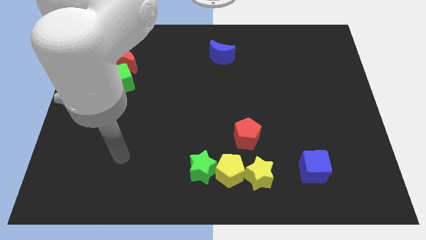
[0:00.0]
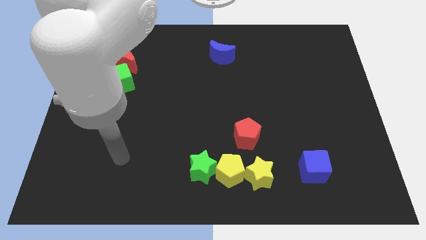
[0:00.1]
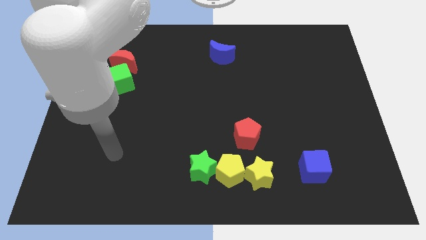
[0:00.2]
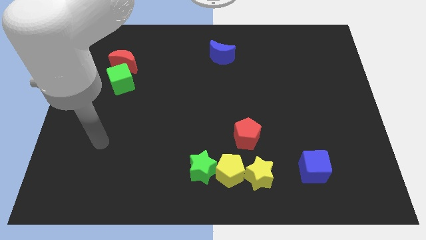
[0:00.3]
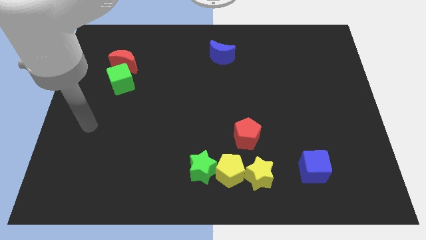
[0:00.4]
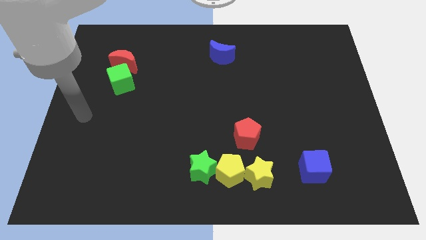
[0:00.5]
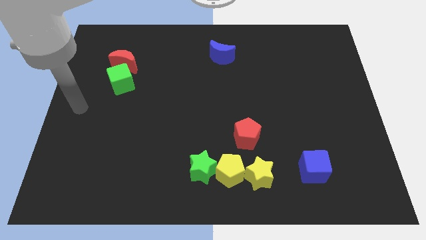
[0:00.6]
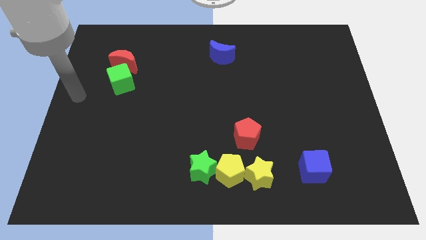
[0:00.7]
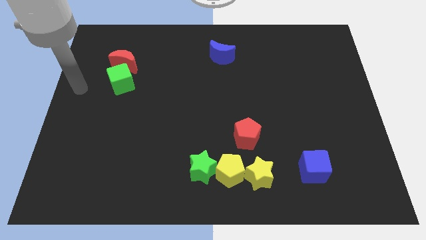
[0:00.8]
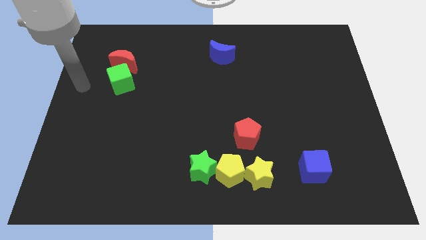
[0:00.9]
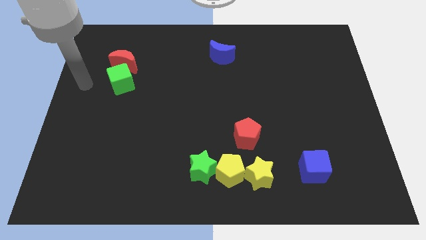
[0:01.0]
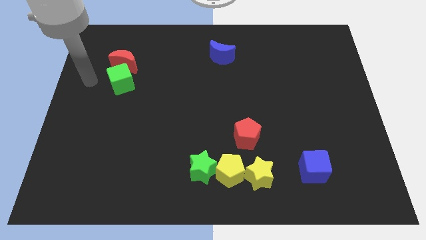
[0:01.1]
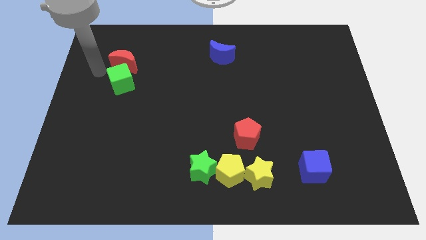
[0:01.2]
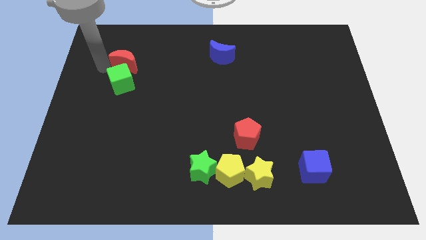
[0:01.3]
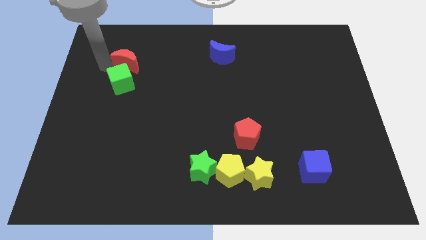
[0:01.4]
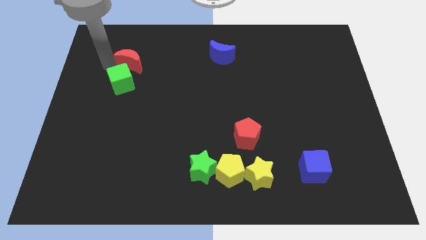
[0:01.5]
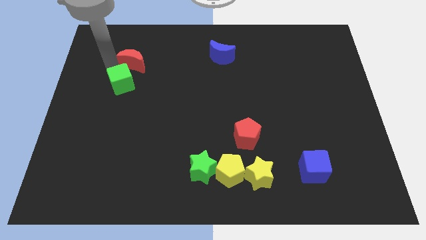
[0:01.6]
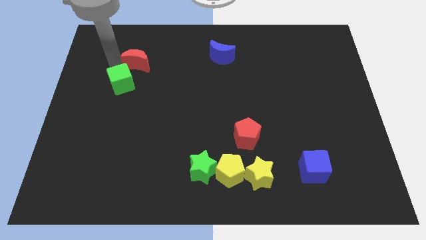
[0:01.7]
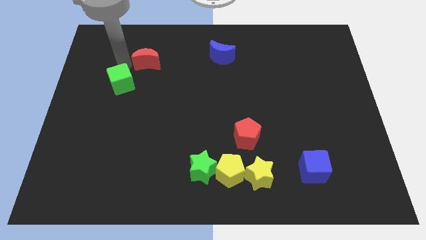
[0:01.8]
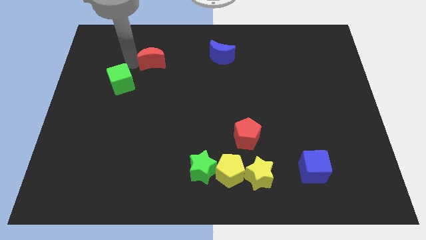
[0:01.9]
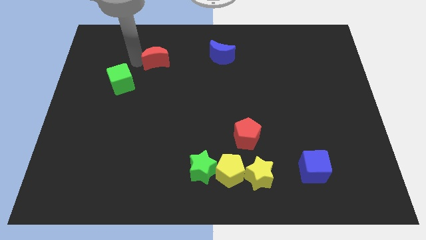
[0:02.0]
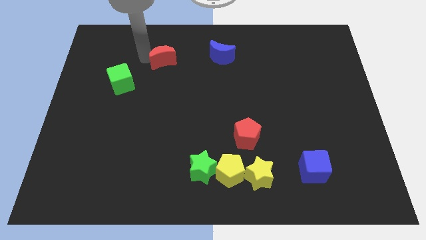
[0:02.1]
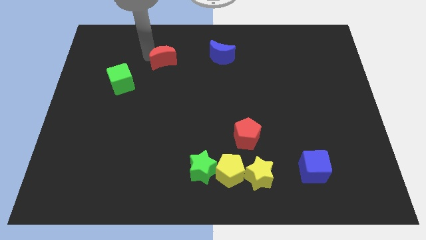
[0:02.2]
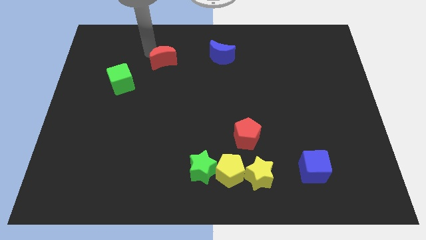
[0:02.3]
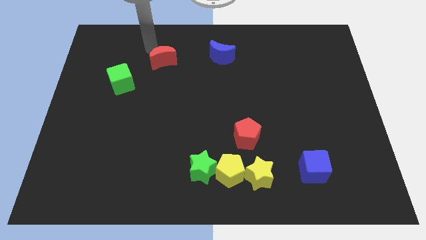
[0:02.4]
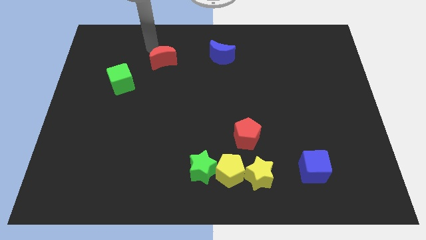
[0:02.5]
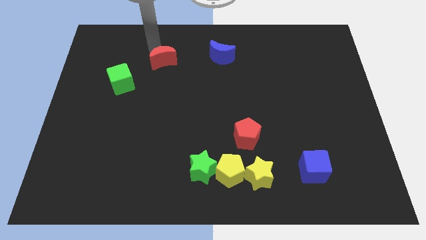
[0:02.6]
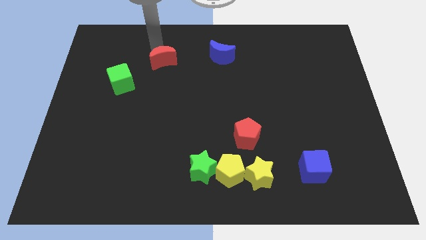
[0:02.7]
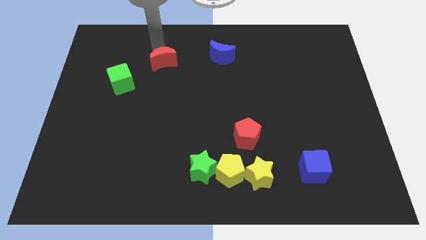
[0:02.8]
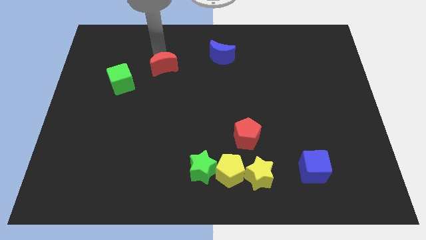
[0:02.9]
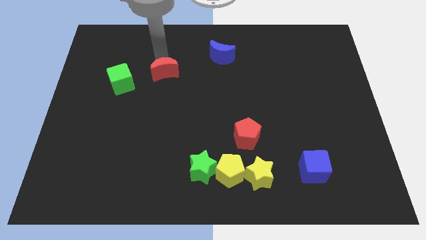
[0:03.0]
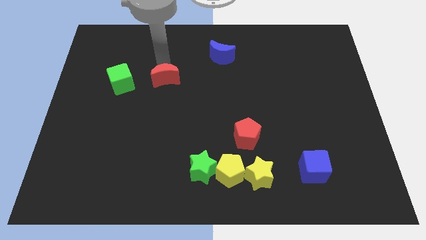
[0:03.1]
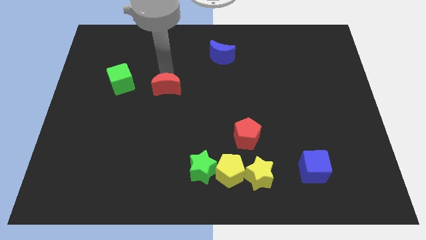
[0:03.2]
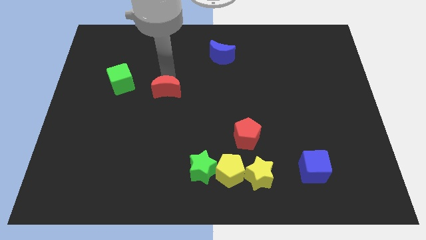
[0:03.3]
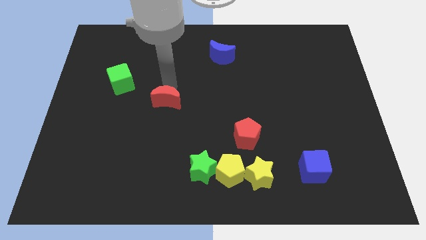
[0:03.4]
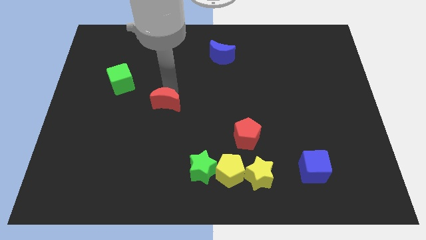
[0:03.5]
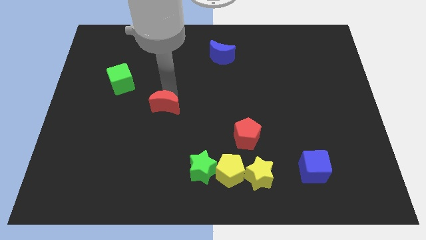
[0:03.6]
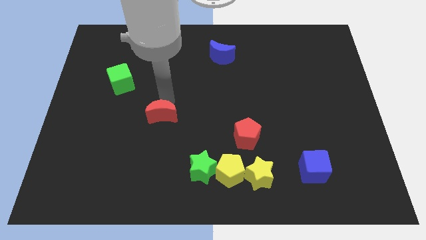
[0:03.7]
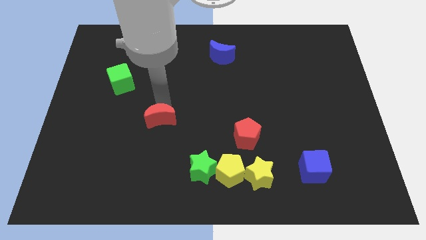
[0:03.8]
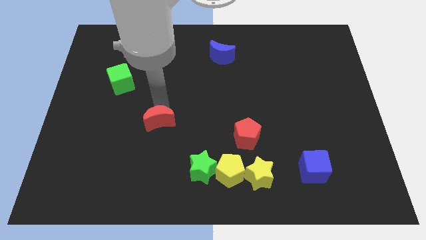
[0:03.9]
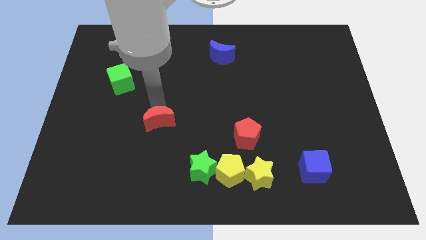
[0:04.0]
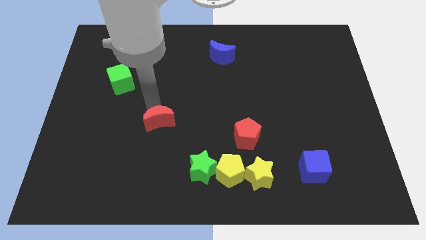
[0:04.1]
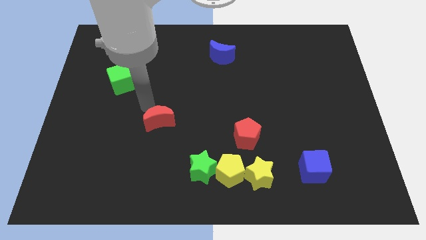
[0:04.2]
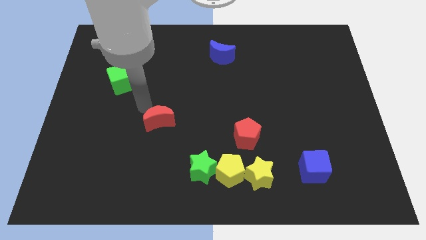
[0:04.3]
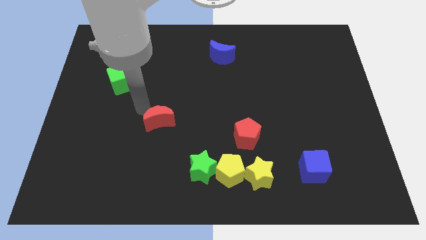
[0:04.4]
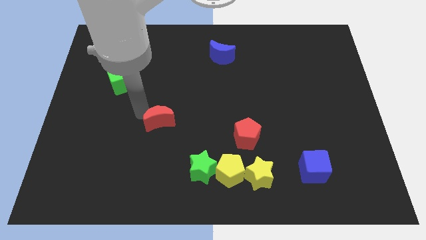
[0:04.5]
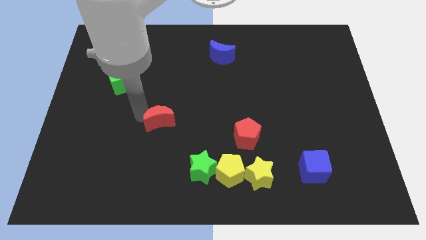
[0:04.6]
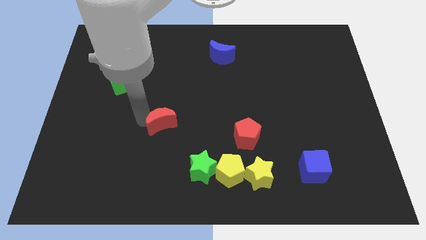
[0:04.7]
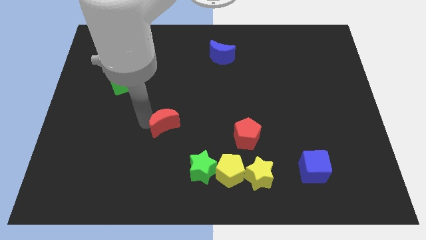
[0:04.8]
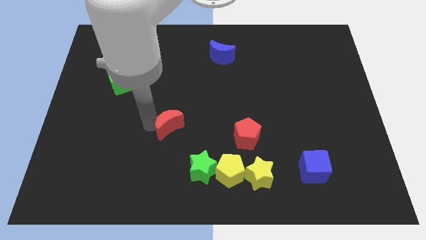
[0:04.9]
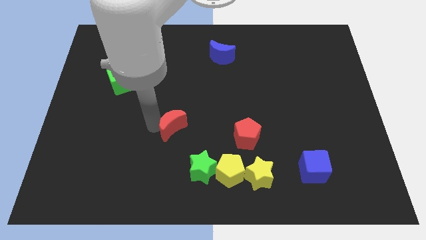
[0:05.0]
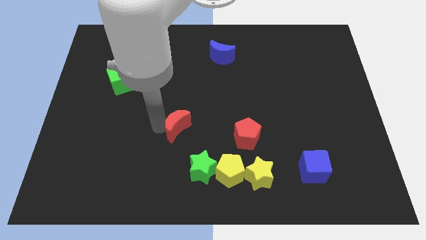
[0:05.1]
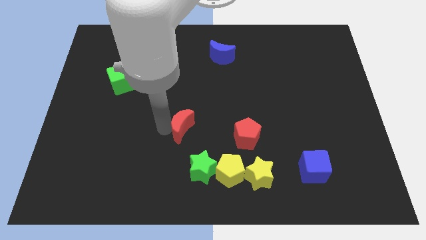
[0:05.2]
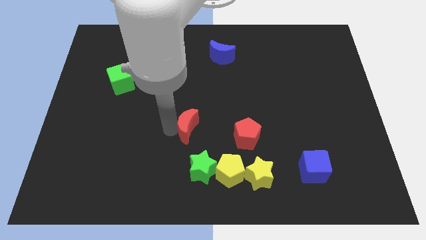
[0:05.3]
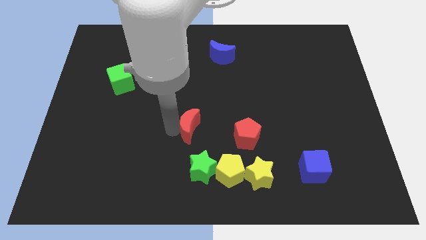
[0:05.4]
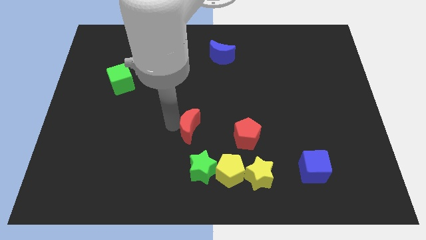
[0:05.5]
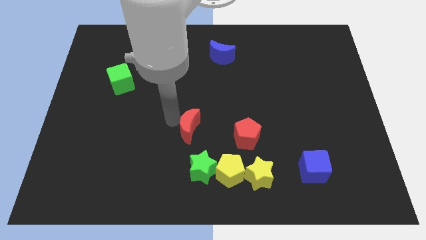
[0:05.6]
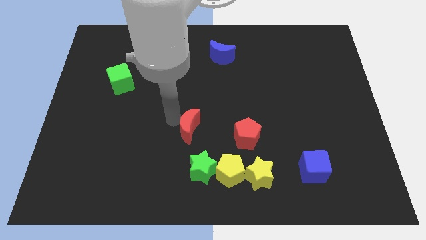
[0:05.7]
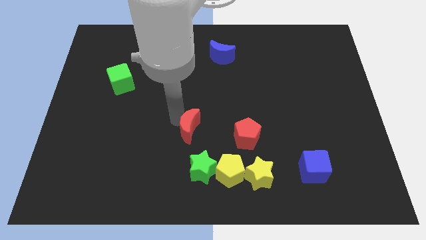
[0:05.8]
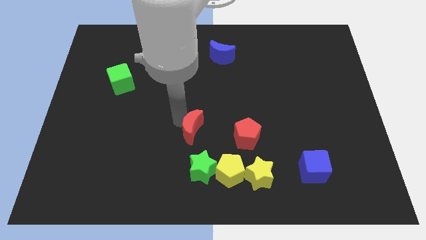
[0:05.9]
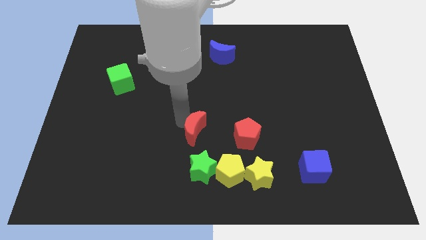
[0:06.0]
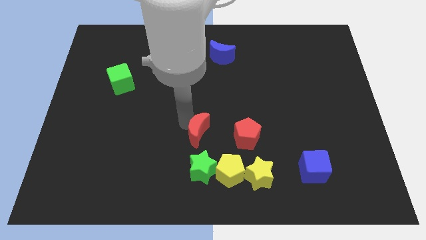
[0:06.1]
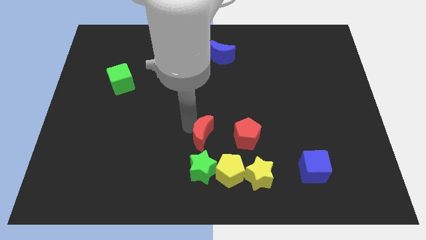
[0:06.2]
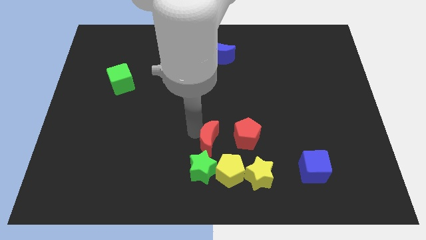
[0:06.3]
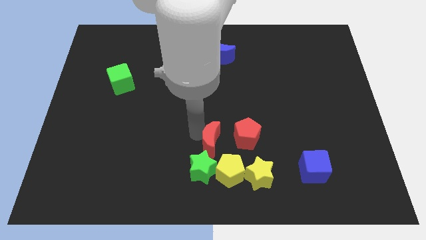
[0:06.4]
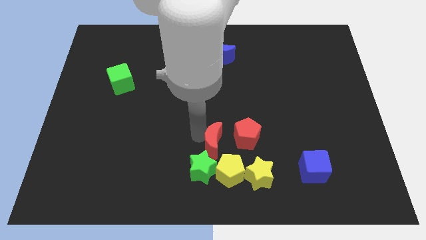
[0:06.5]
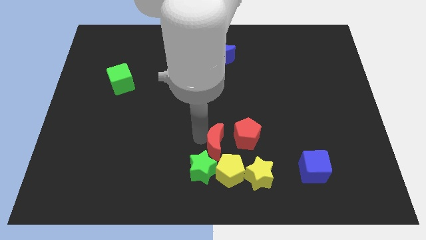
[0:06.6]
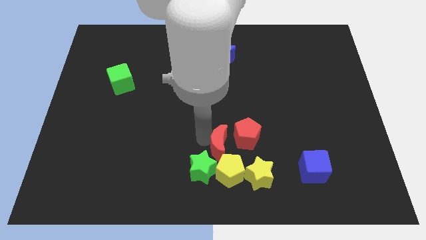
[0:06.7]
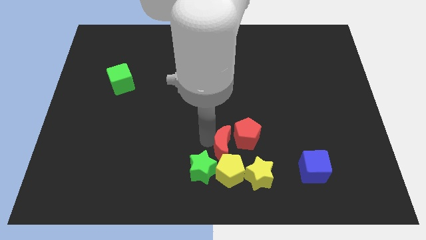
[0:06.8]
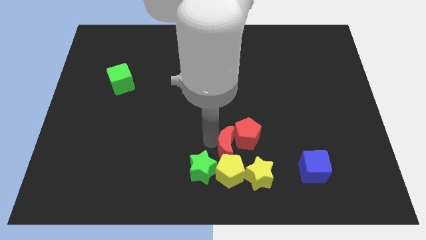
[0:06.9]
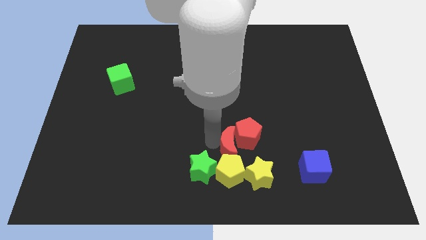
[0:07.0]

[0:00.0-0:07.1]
move the red moon towards the yellow pentagon

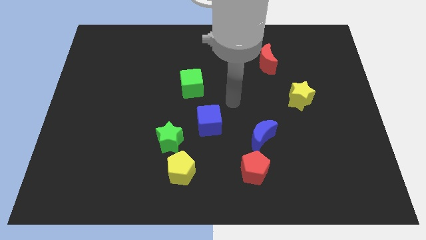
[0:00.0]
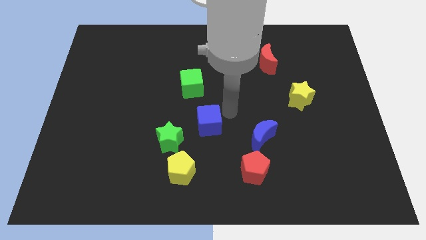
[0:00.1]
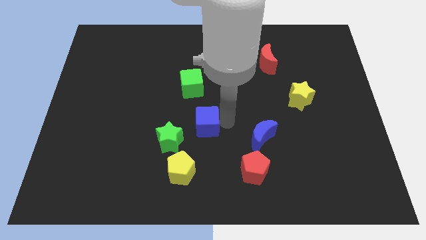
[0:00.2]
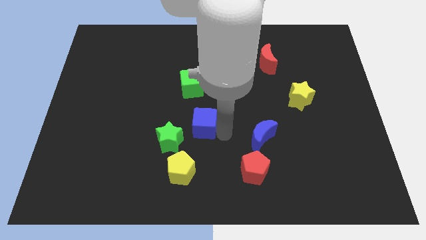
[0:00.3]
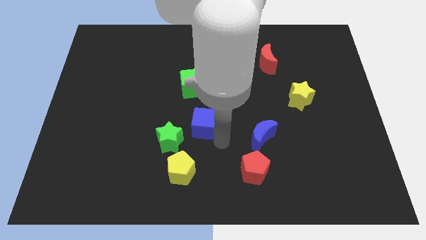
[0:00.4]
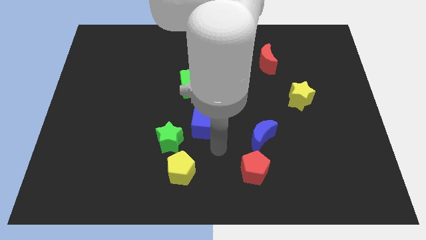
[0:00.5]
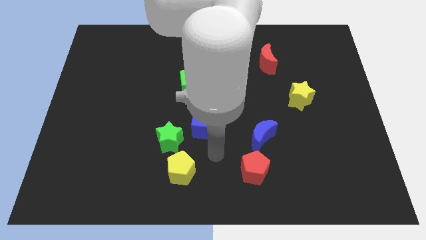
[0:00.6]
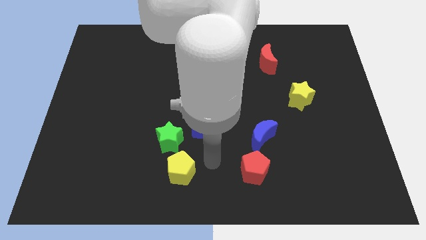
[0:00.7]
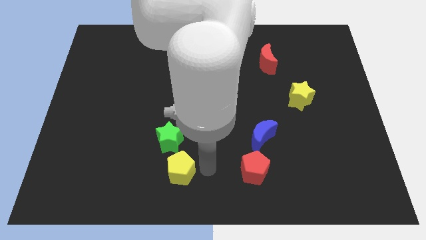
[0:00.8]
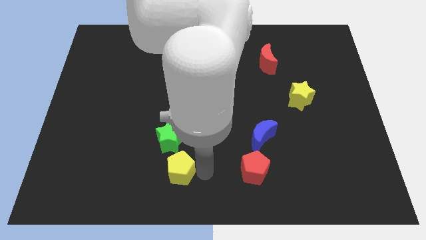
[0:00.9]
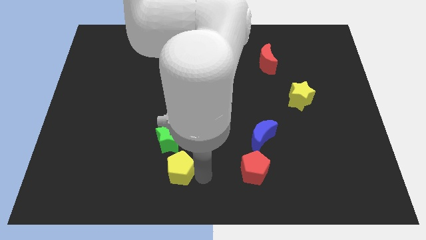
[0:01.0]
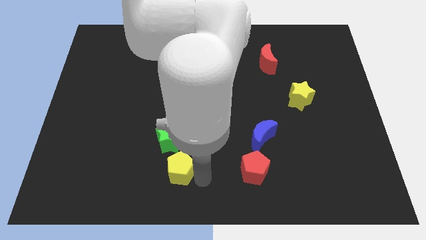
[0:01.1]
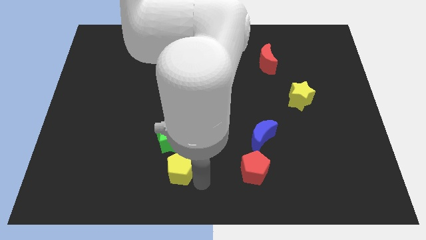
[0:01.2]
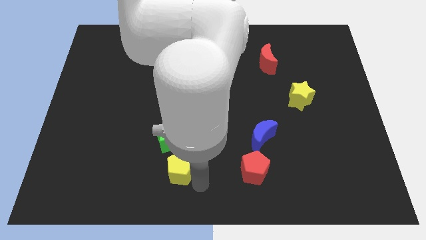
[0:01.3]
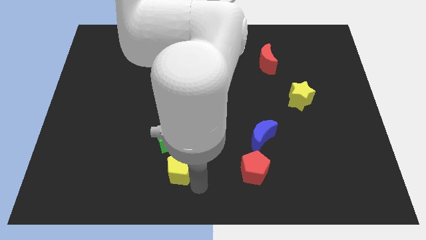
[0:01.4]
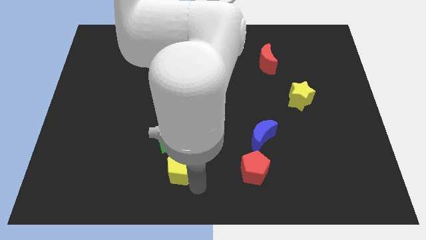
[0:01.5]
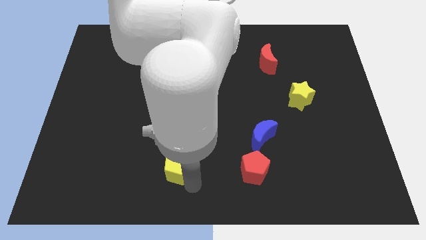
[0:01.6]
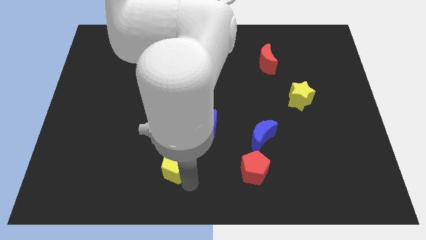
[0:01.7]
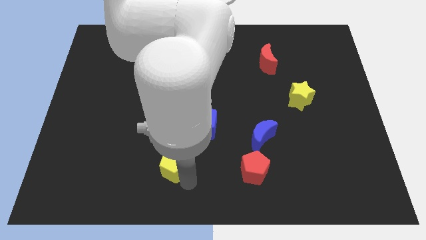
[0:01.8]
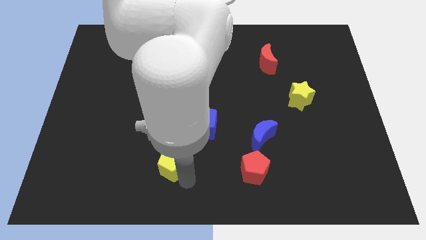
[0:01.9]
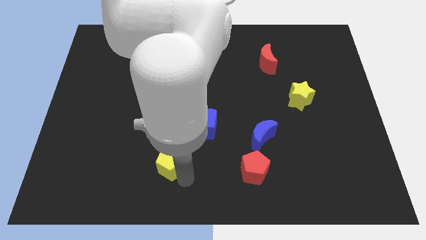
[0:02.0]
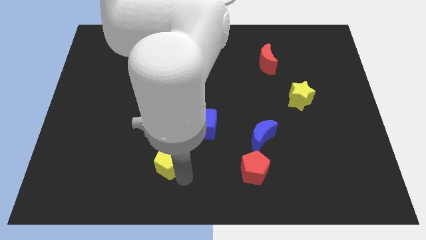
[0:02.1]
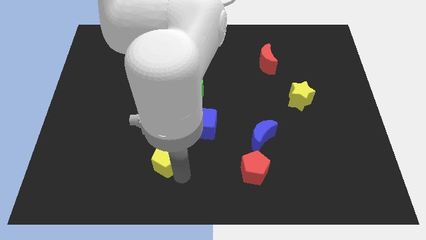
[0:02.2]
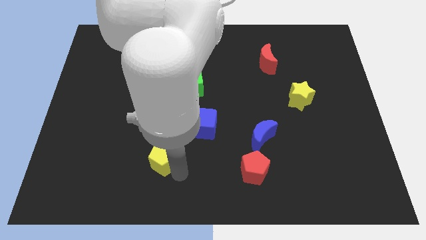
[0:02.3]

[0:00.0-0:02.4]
slide the yellow pentagon next to the green star
